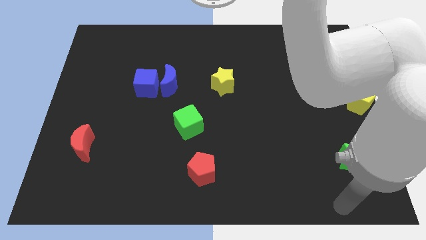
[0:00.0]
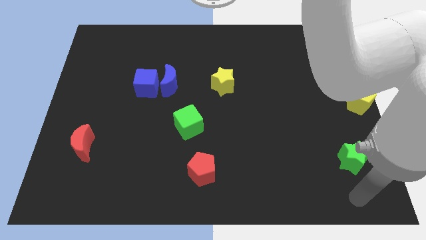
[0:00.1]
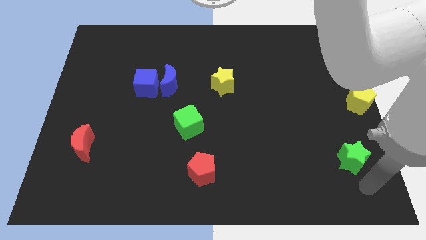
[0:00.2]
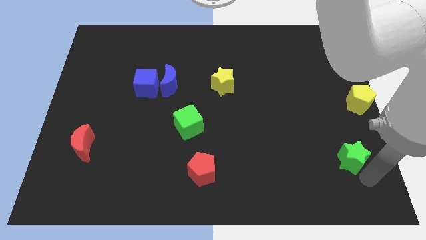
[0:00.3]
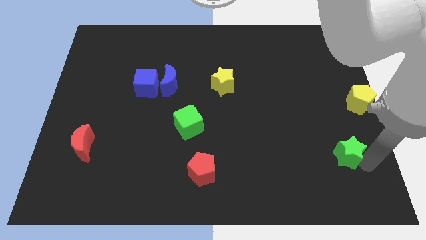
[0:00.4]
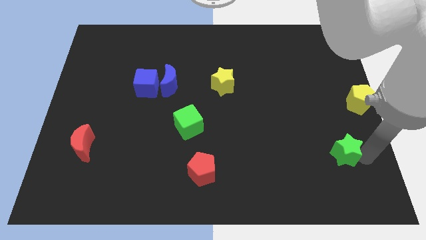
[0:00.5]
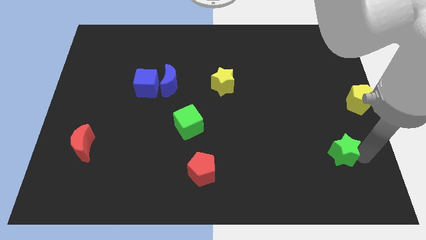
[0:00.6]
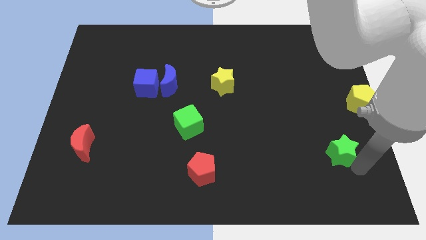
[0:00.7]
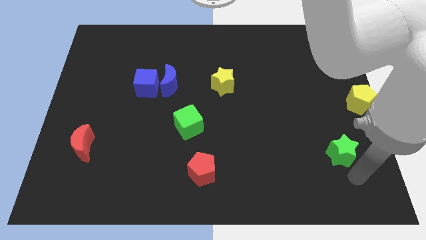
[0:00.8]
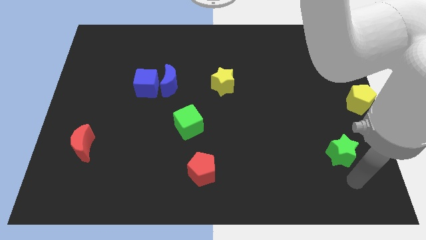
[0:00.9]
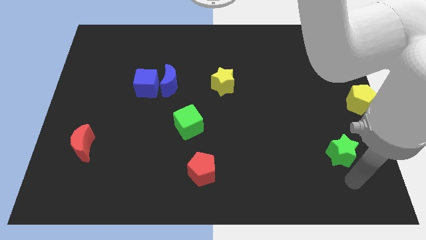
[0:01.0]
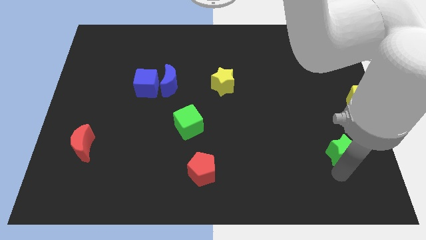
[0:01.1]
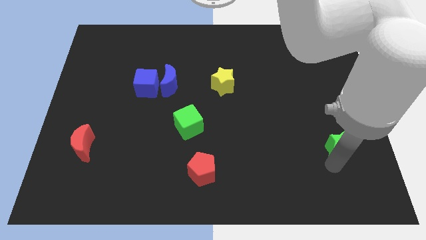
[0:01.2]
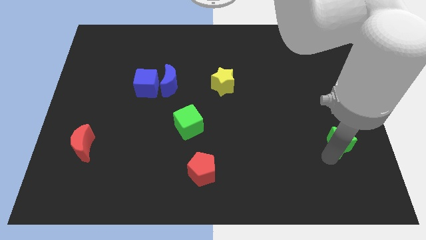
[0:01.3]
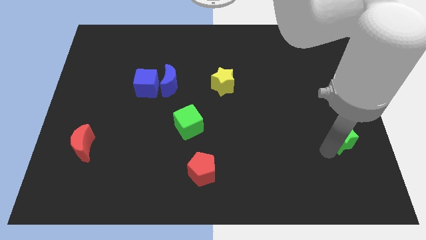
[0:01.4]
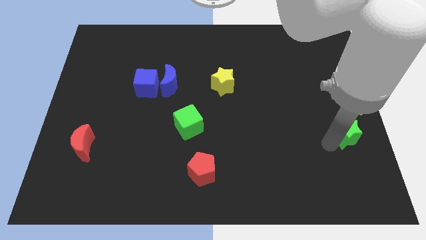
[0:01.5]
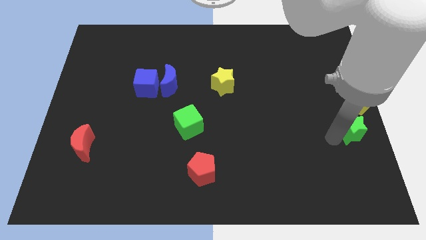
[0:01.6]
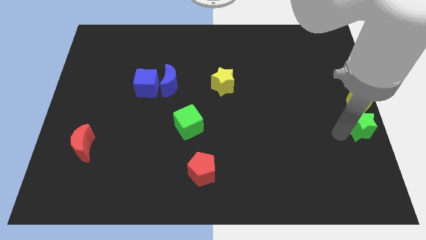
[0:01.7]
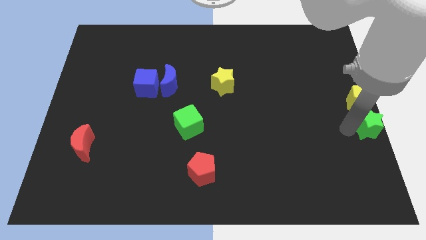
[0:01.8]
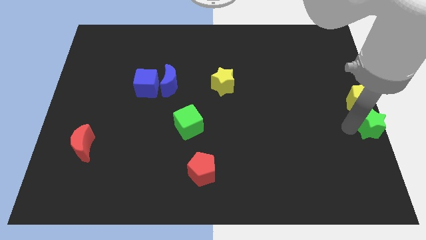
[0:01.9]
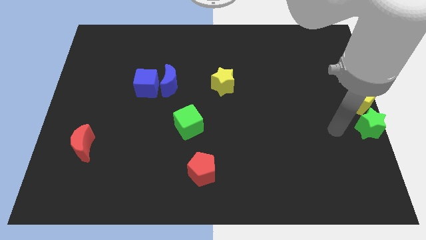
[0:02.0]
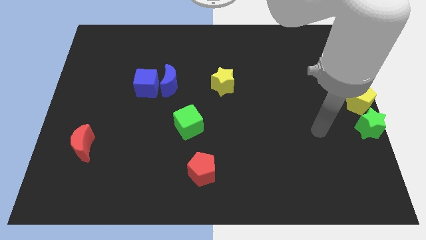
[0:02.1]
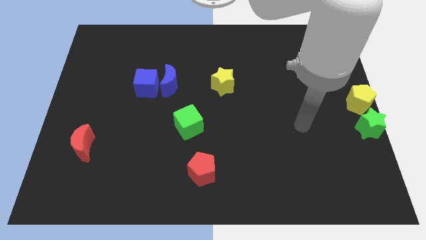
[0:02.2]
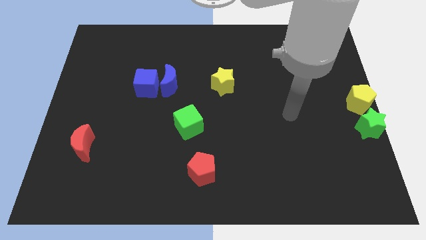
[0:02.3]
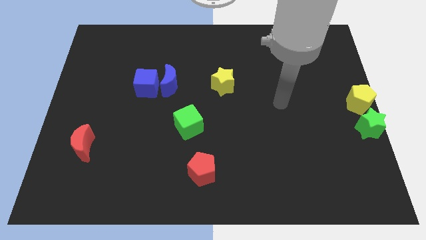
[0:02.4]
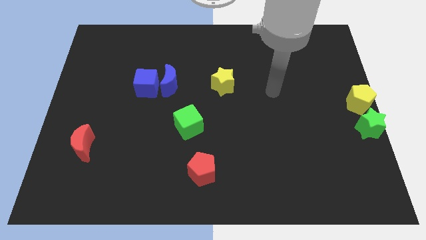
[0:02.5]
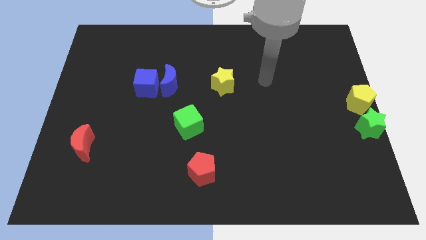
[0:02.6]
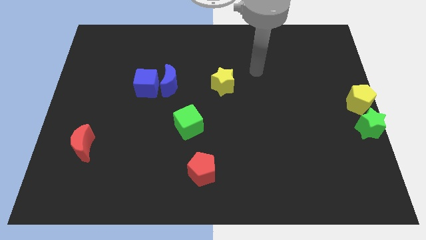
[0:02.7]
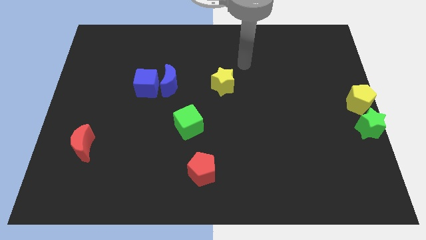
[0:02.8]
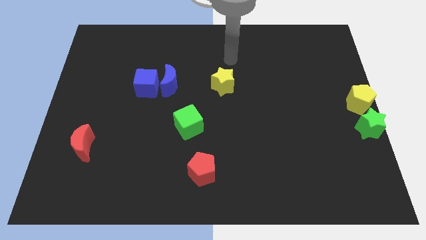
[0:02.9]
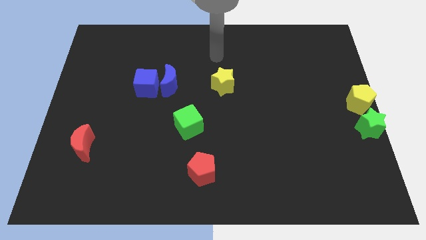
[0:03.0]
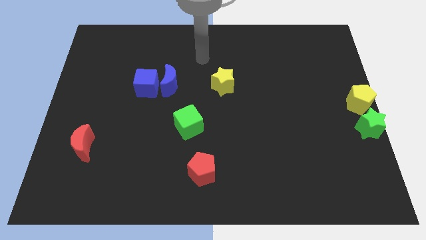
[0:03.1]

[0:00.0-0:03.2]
move the green star bottom to the yellow pentagon

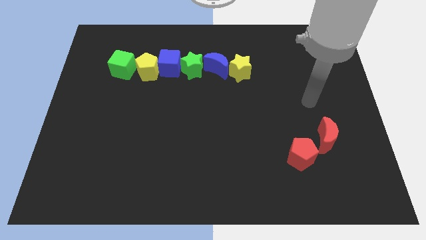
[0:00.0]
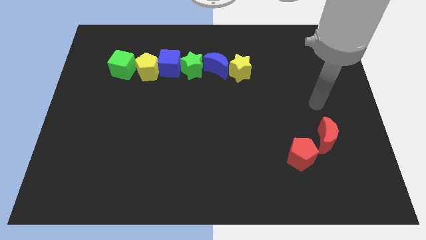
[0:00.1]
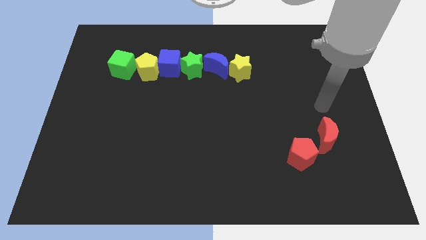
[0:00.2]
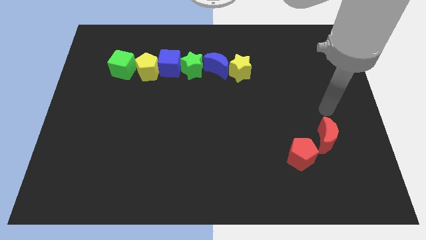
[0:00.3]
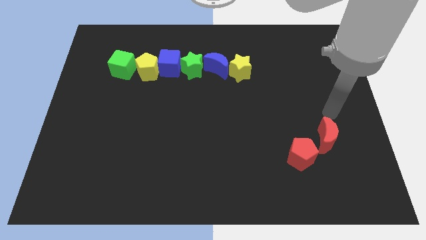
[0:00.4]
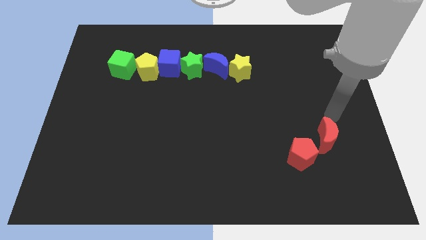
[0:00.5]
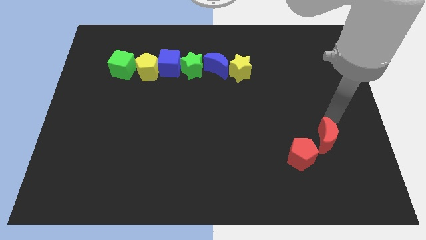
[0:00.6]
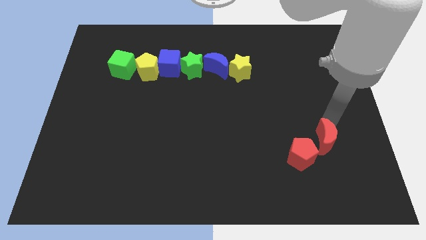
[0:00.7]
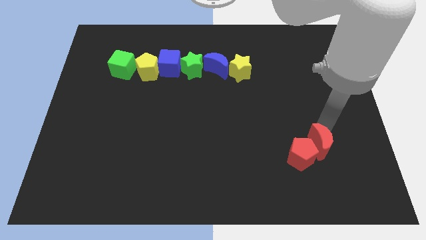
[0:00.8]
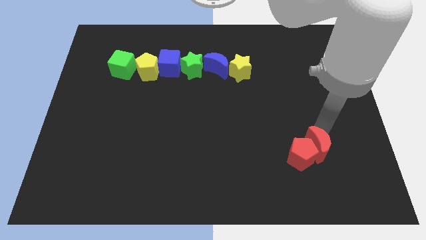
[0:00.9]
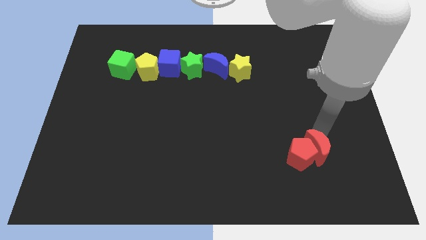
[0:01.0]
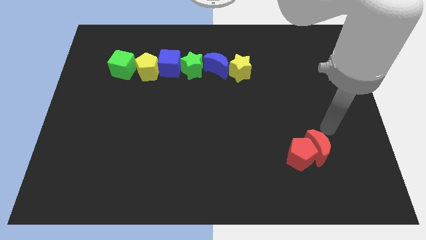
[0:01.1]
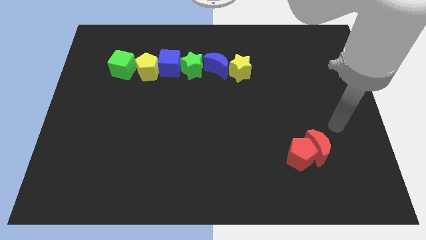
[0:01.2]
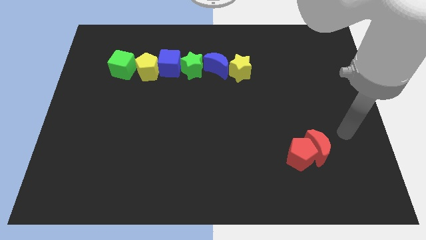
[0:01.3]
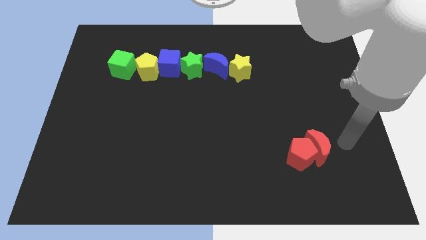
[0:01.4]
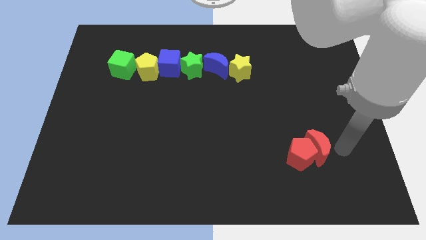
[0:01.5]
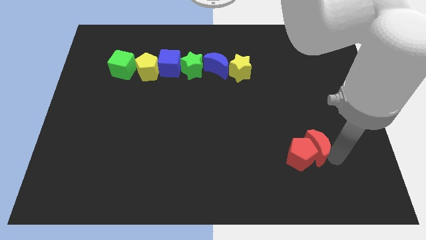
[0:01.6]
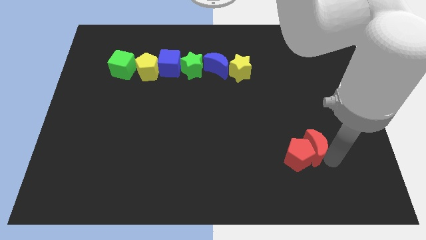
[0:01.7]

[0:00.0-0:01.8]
push the red moon into the red pentagon

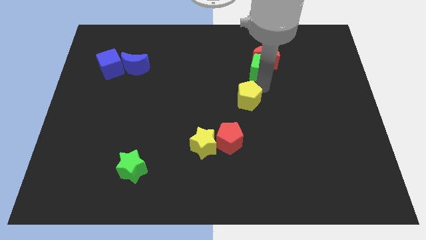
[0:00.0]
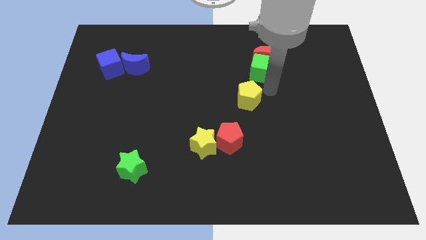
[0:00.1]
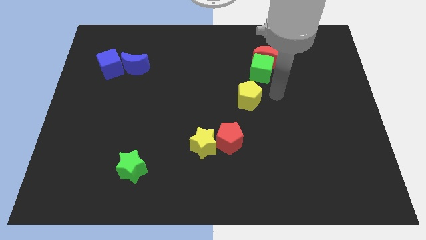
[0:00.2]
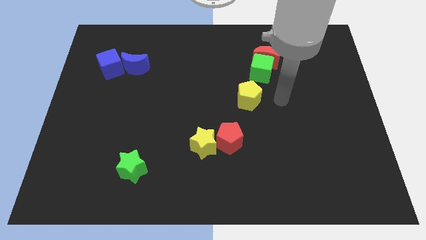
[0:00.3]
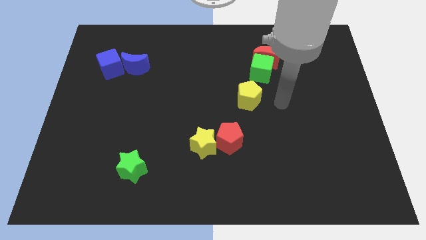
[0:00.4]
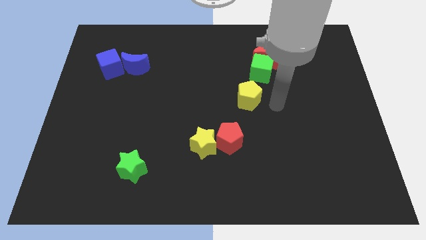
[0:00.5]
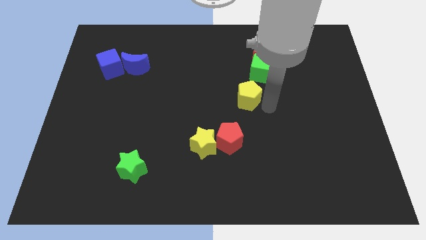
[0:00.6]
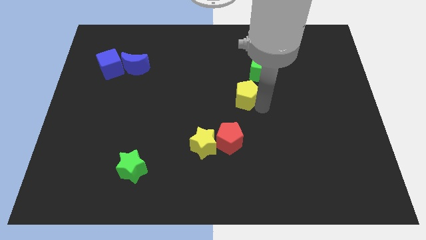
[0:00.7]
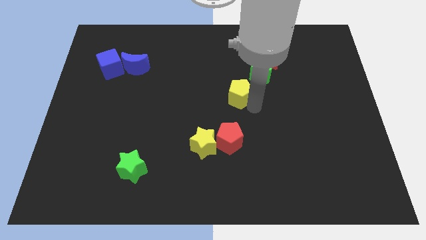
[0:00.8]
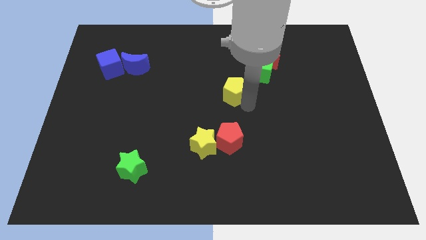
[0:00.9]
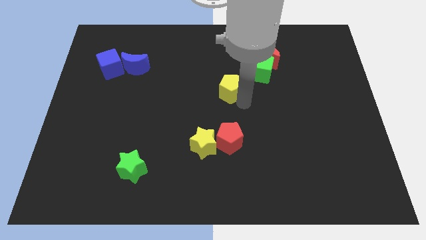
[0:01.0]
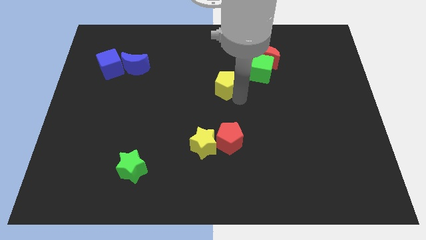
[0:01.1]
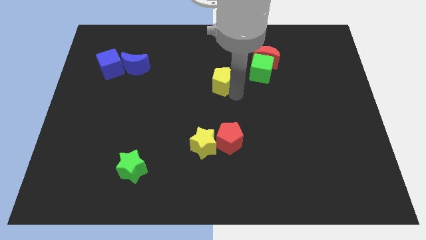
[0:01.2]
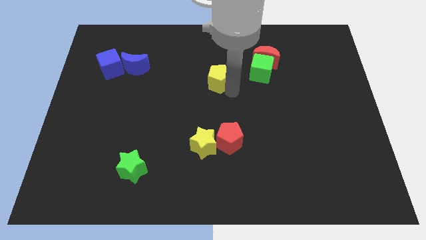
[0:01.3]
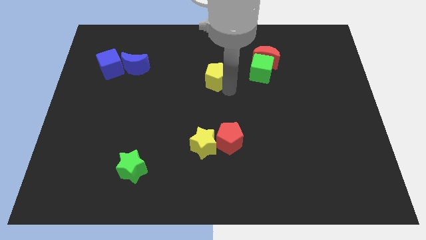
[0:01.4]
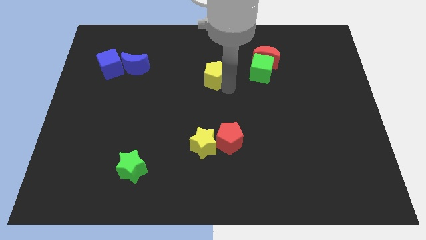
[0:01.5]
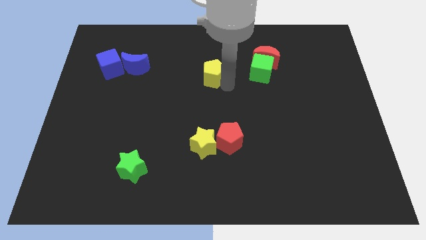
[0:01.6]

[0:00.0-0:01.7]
move the yellow pentagon parallel to the green cube

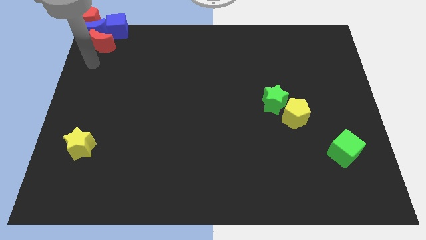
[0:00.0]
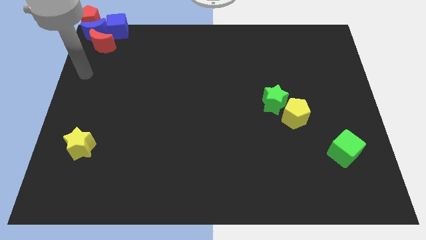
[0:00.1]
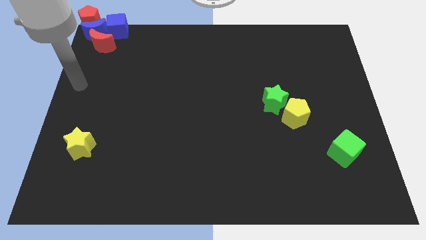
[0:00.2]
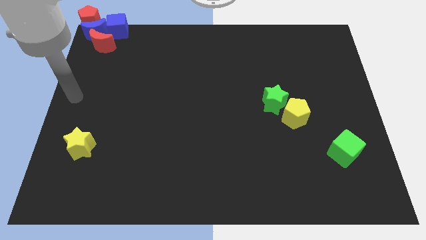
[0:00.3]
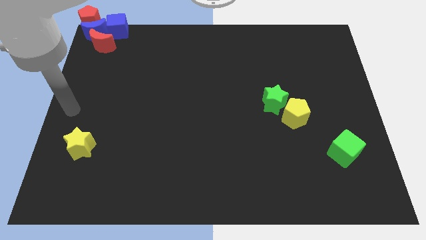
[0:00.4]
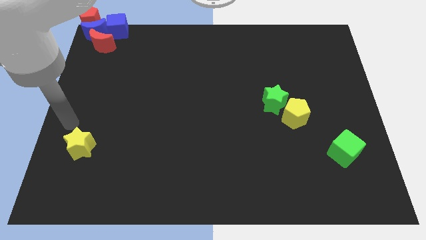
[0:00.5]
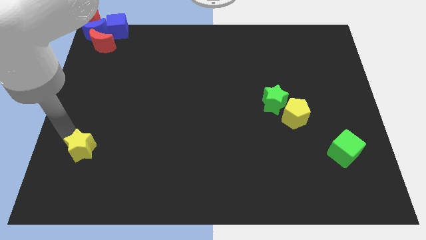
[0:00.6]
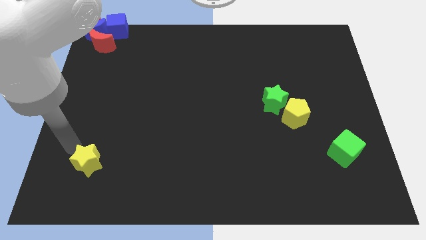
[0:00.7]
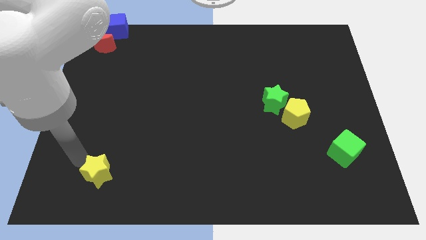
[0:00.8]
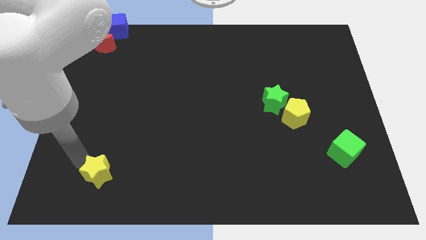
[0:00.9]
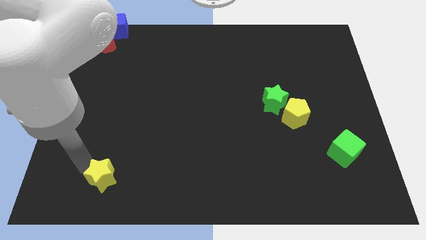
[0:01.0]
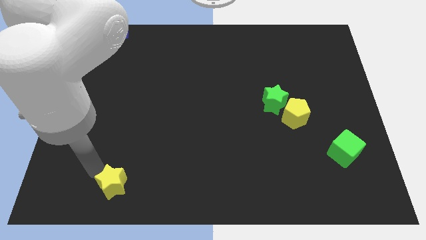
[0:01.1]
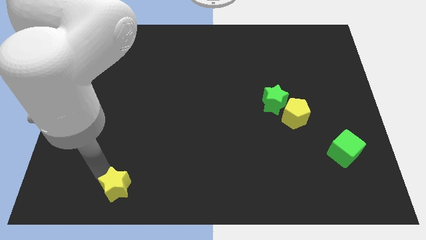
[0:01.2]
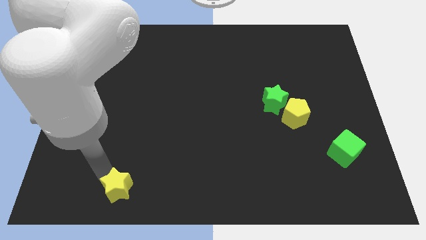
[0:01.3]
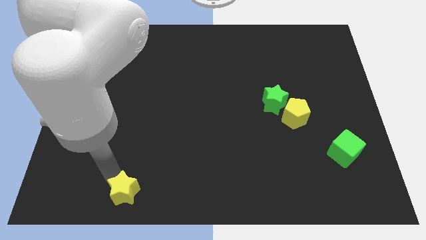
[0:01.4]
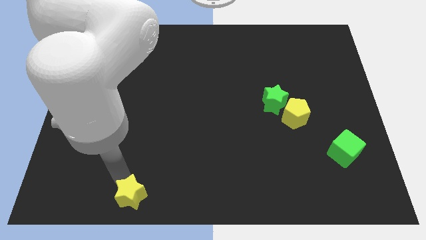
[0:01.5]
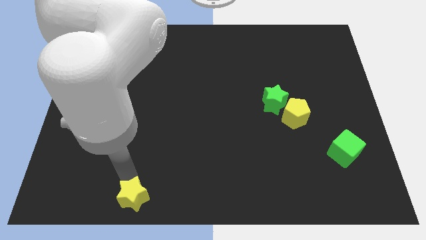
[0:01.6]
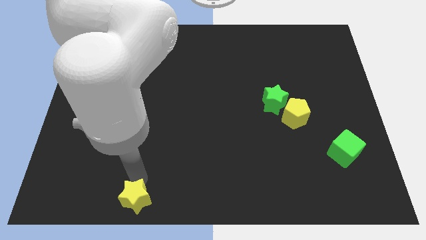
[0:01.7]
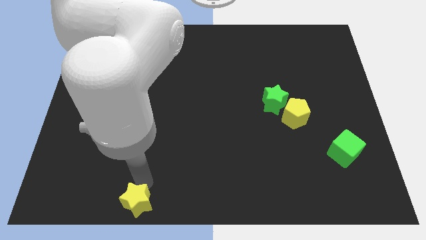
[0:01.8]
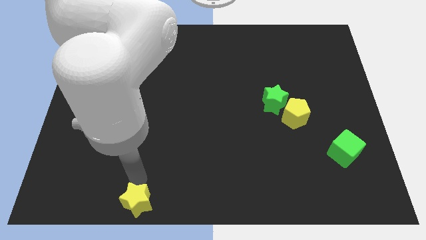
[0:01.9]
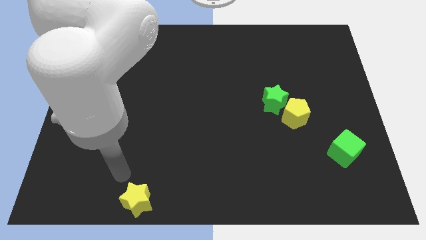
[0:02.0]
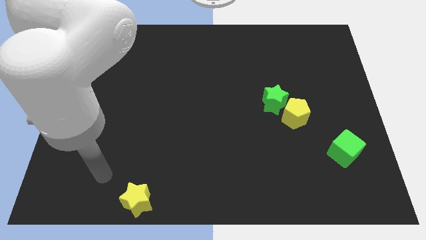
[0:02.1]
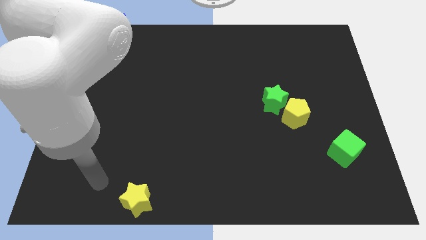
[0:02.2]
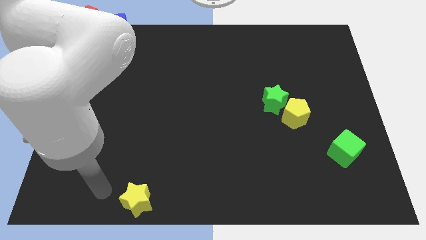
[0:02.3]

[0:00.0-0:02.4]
push the yellow star to the bottom center
